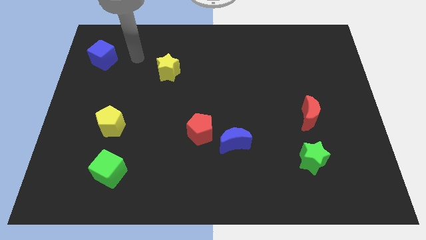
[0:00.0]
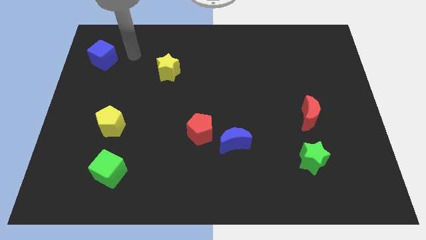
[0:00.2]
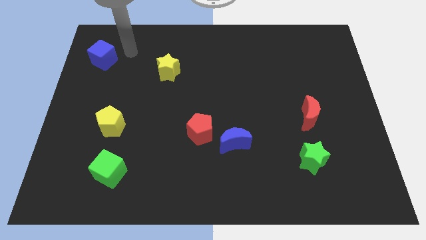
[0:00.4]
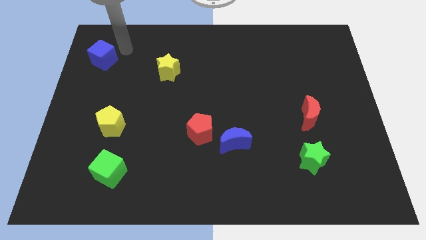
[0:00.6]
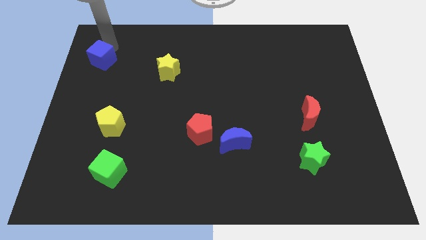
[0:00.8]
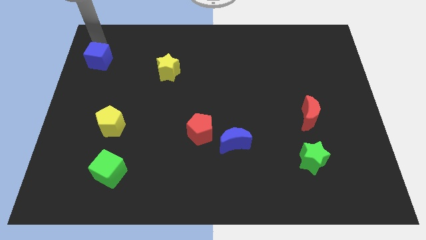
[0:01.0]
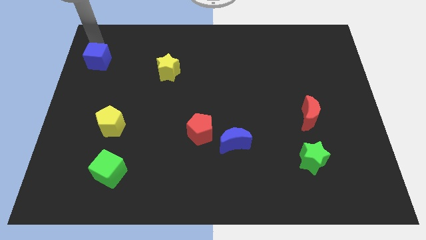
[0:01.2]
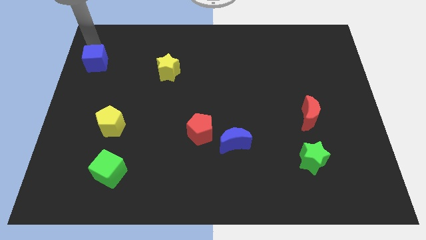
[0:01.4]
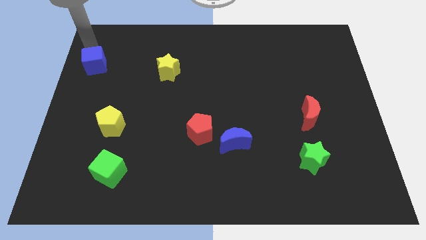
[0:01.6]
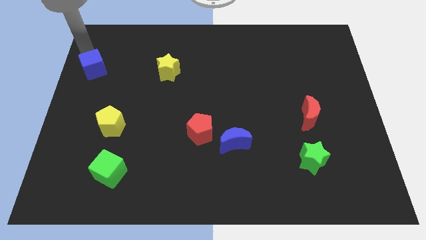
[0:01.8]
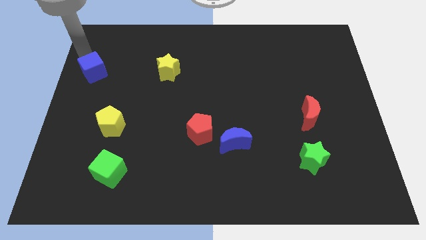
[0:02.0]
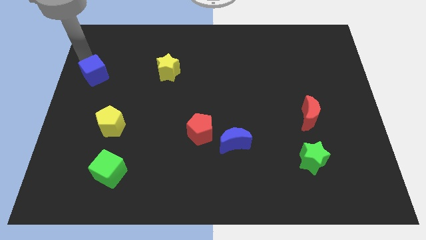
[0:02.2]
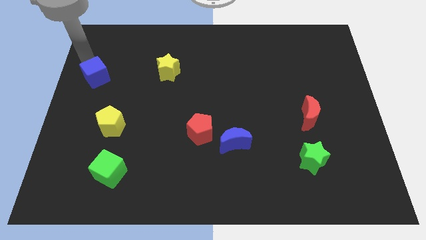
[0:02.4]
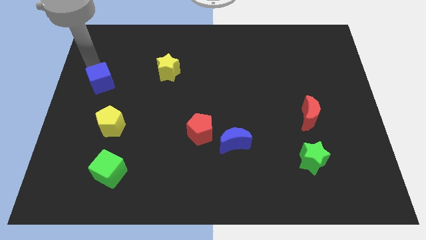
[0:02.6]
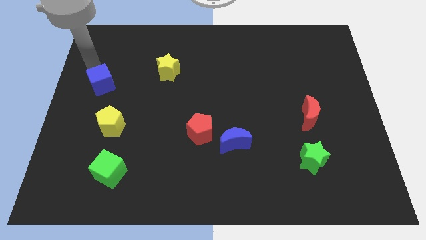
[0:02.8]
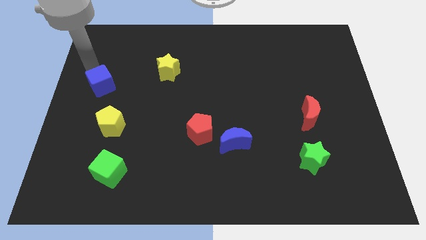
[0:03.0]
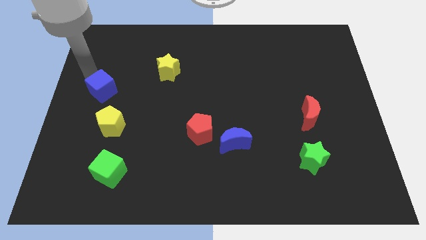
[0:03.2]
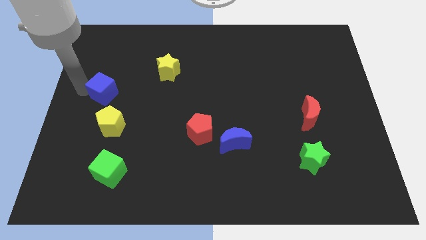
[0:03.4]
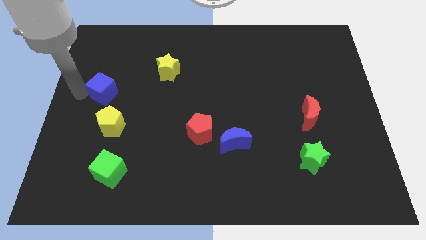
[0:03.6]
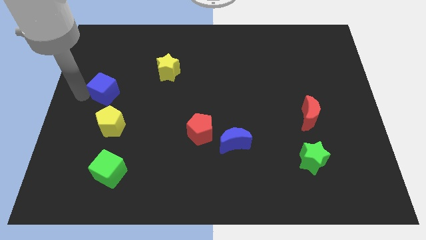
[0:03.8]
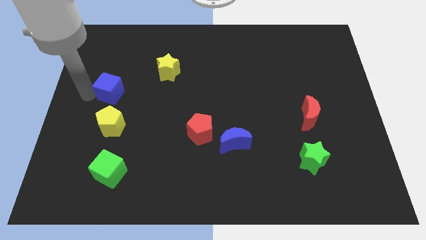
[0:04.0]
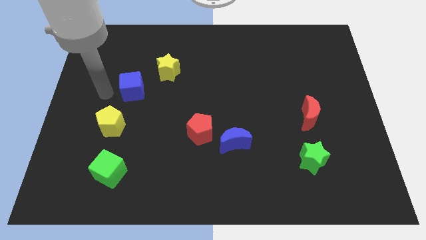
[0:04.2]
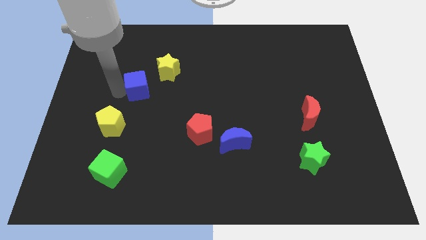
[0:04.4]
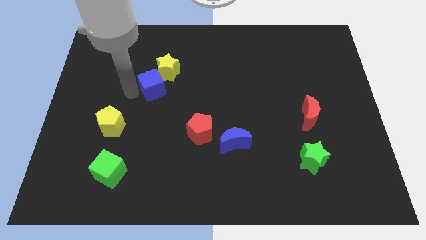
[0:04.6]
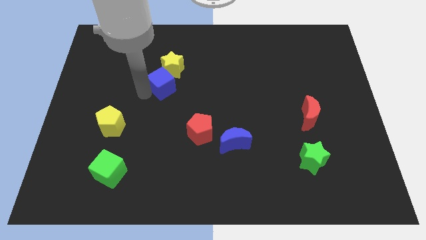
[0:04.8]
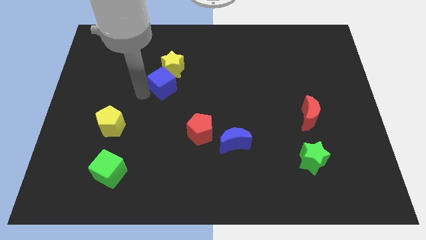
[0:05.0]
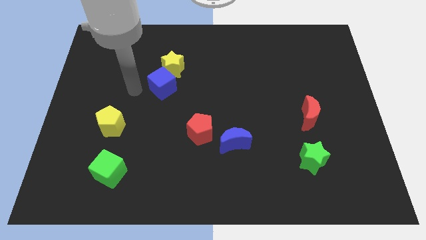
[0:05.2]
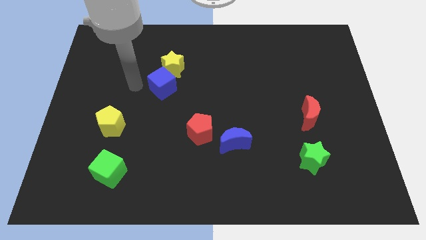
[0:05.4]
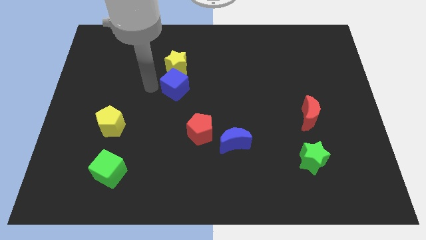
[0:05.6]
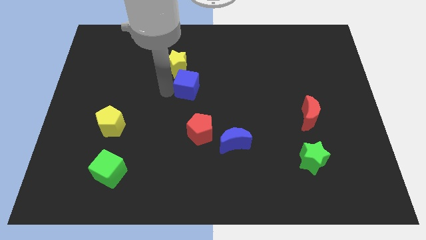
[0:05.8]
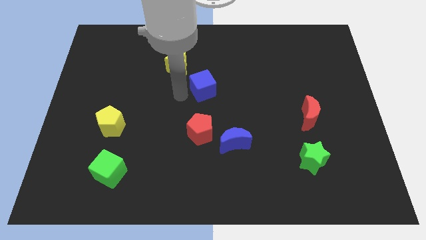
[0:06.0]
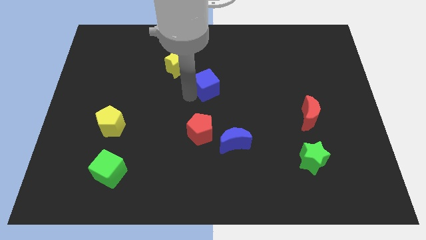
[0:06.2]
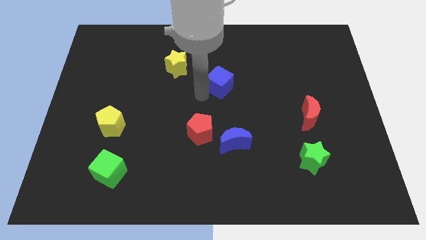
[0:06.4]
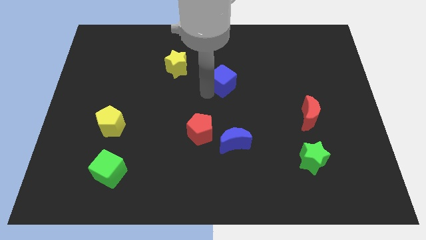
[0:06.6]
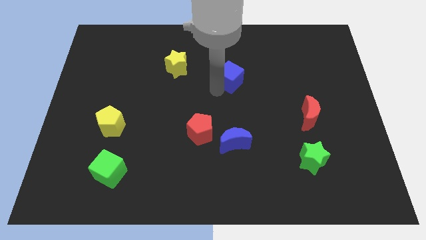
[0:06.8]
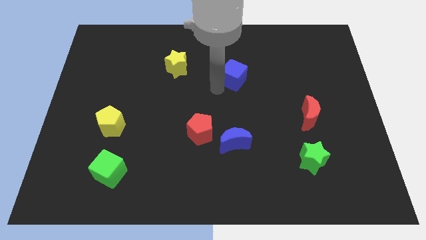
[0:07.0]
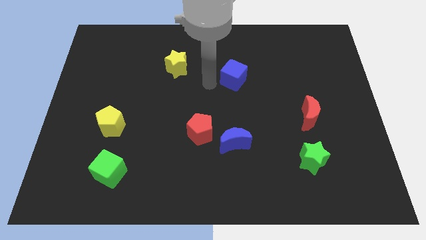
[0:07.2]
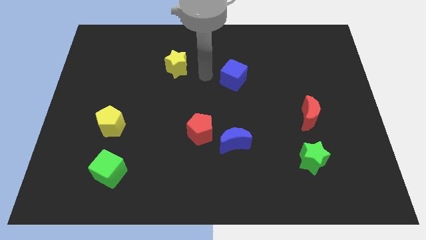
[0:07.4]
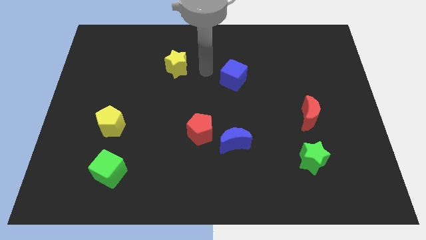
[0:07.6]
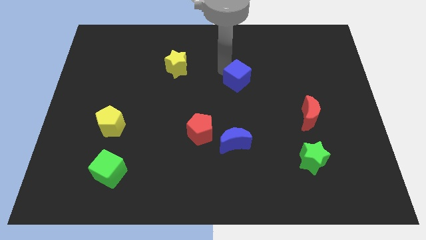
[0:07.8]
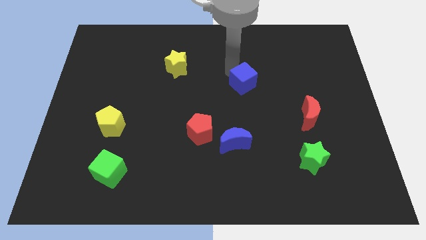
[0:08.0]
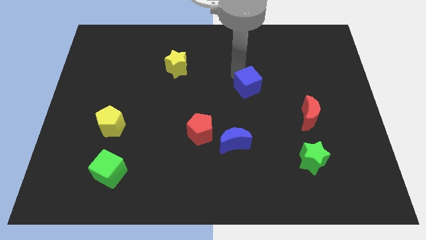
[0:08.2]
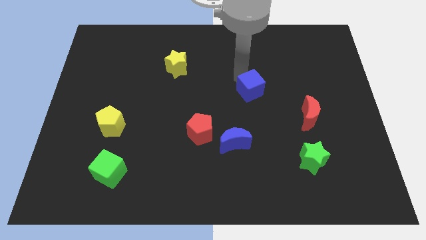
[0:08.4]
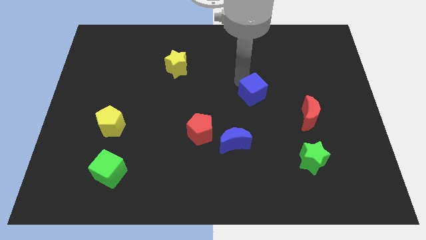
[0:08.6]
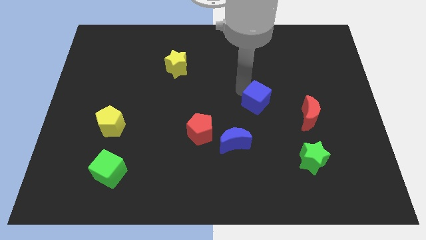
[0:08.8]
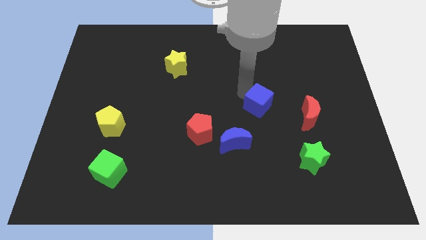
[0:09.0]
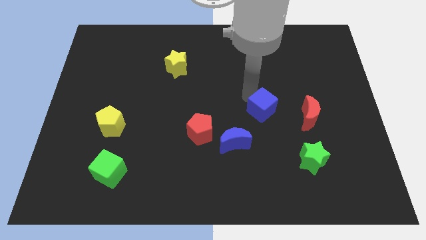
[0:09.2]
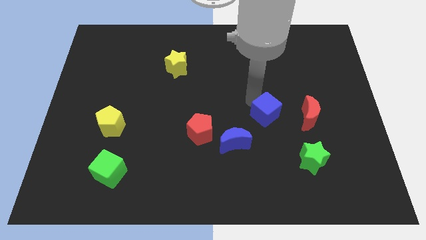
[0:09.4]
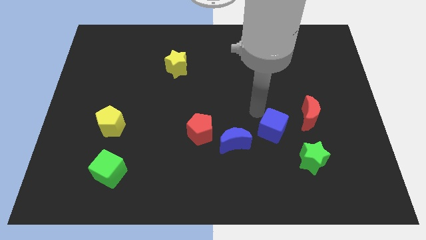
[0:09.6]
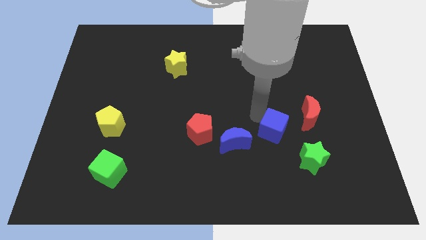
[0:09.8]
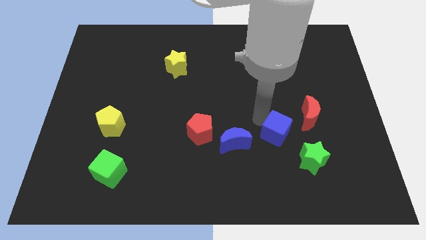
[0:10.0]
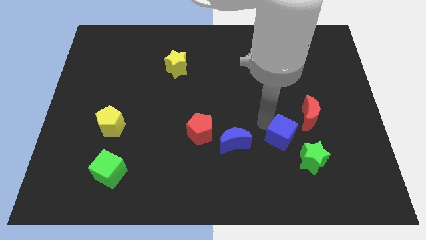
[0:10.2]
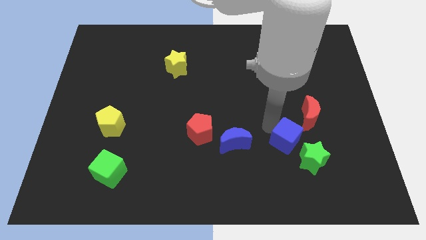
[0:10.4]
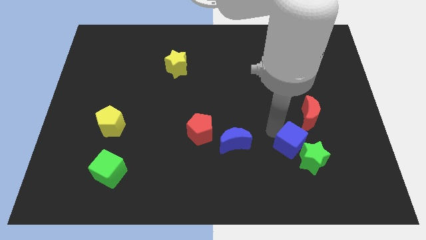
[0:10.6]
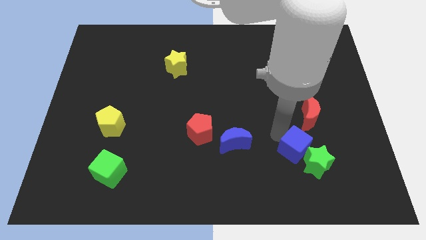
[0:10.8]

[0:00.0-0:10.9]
move the blue cube close to the green star

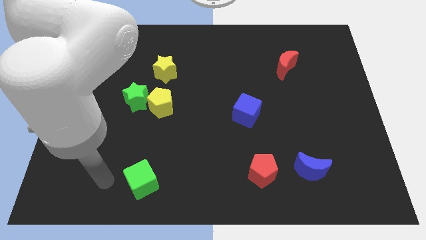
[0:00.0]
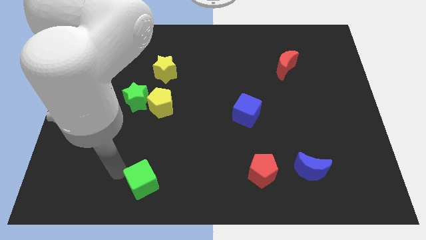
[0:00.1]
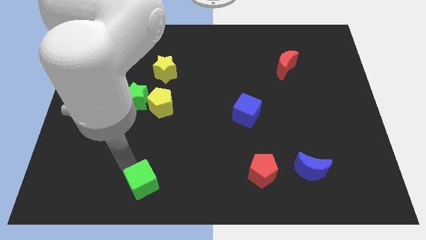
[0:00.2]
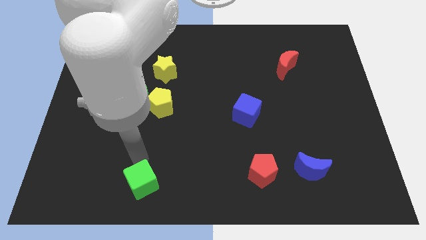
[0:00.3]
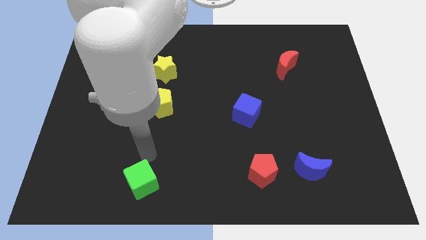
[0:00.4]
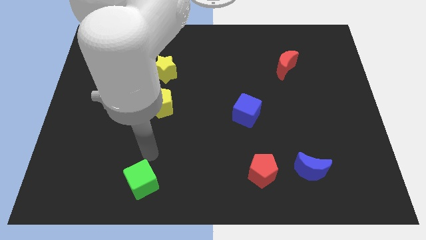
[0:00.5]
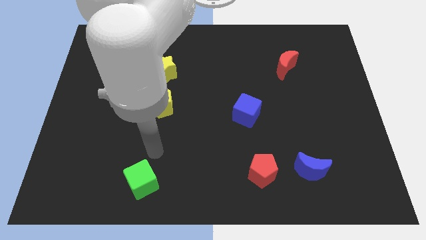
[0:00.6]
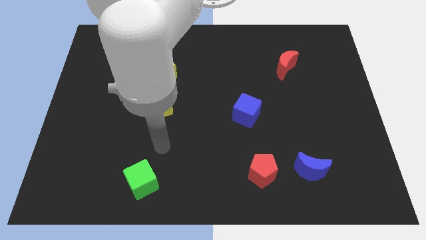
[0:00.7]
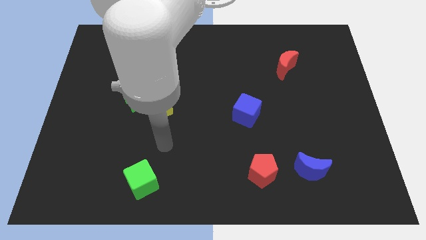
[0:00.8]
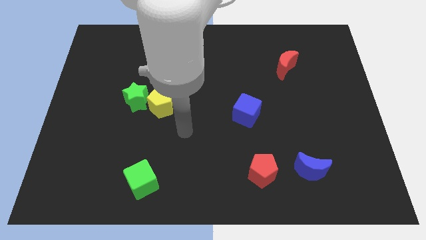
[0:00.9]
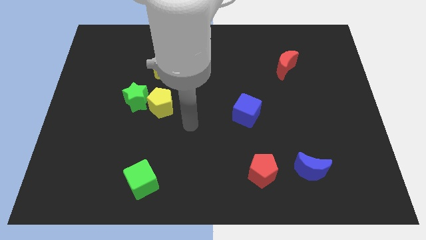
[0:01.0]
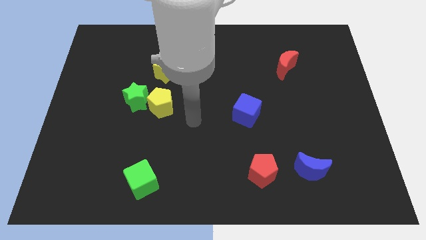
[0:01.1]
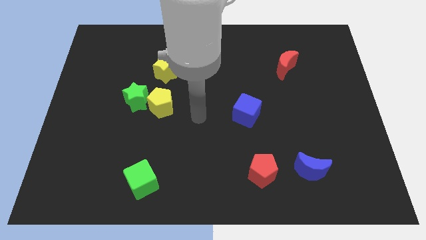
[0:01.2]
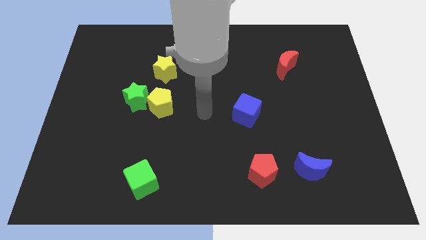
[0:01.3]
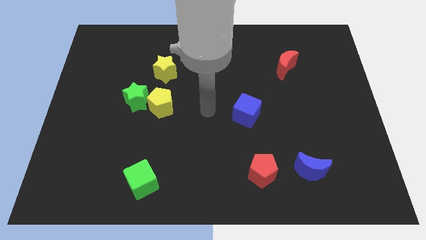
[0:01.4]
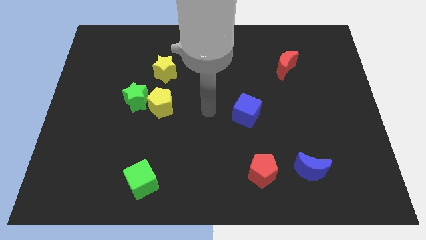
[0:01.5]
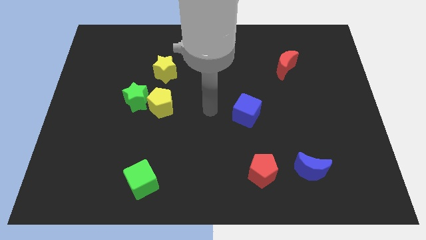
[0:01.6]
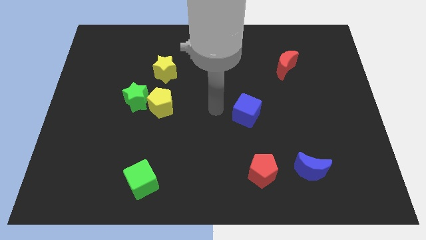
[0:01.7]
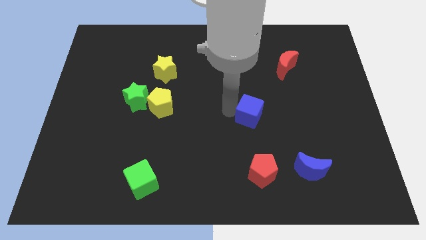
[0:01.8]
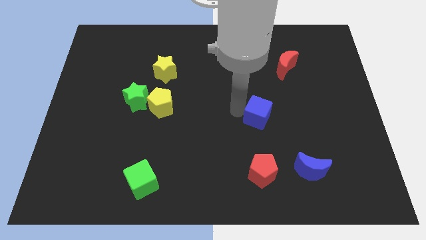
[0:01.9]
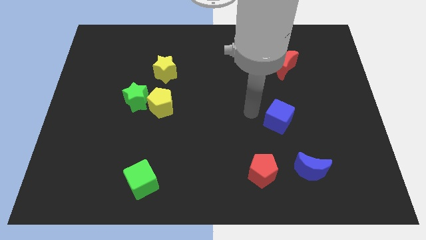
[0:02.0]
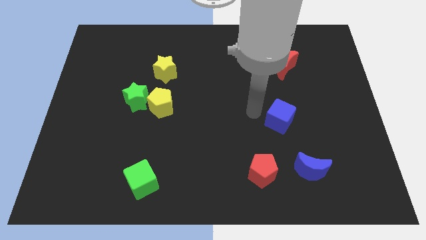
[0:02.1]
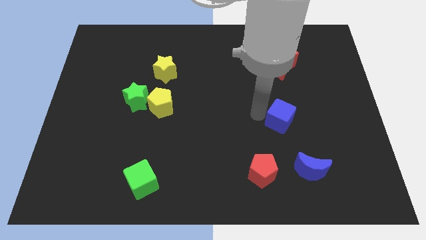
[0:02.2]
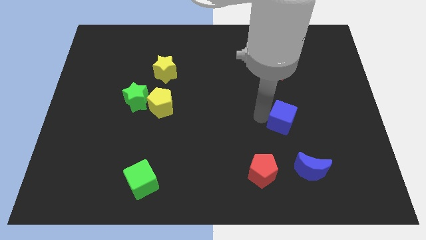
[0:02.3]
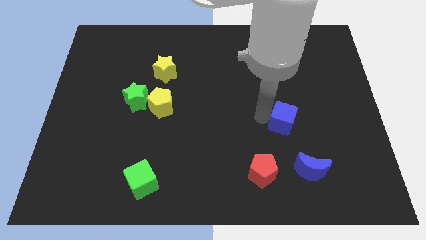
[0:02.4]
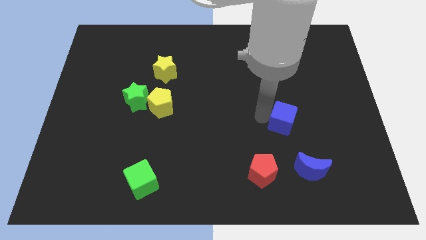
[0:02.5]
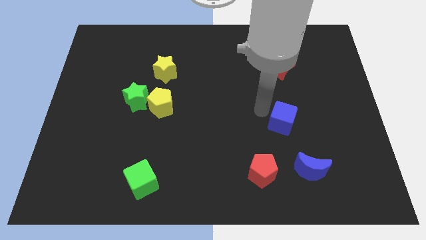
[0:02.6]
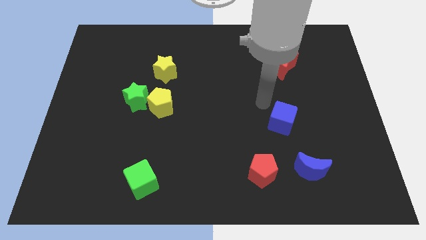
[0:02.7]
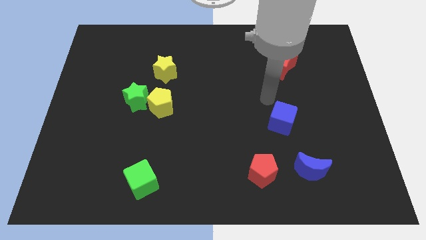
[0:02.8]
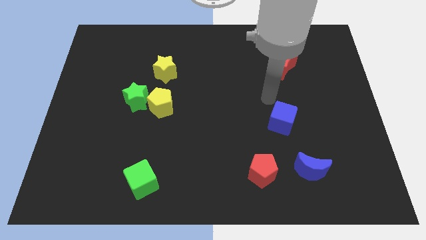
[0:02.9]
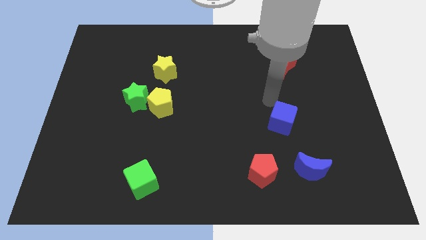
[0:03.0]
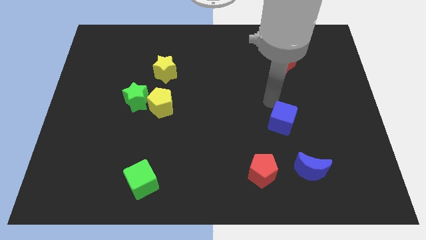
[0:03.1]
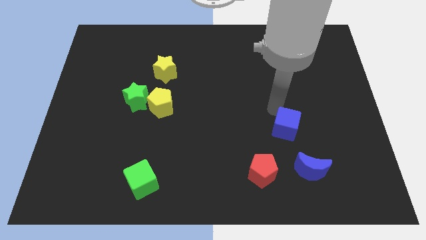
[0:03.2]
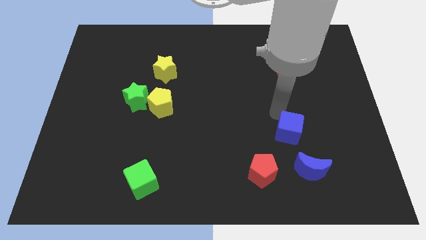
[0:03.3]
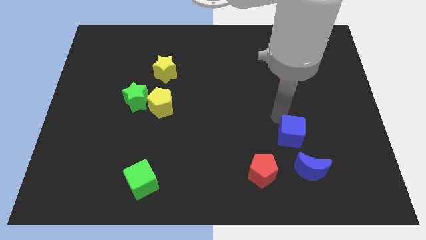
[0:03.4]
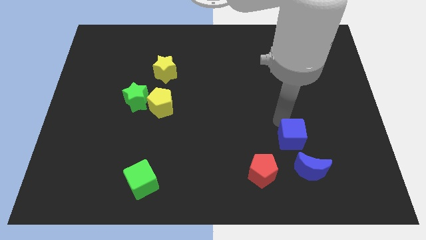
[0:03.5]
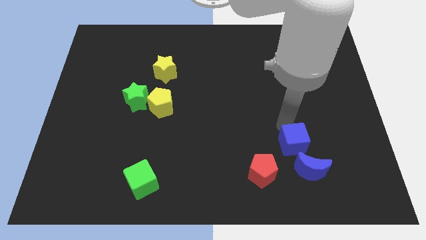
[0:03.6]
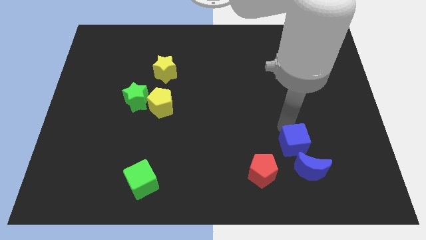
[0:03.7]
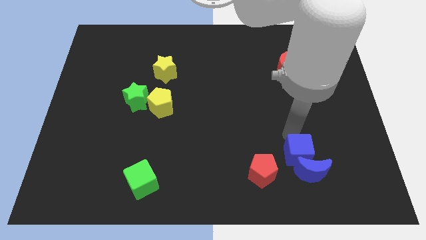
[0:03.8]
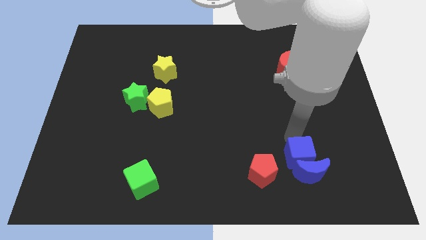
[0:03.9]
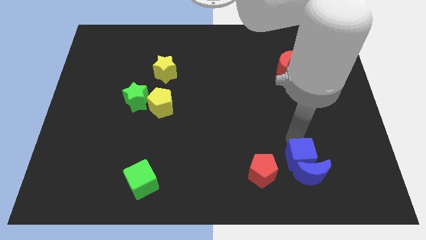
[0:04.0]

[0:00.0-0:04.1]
slide the blue cube towards the blue moon
